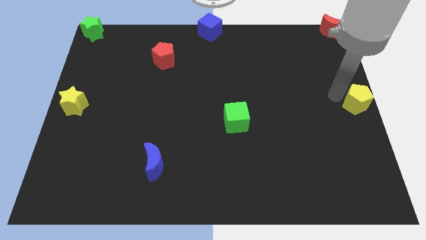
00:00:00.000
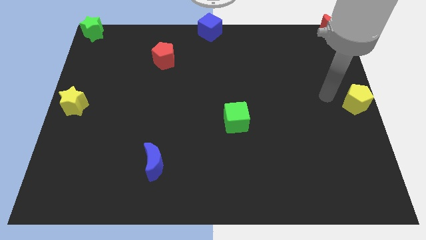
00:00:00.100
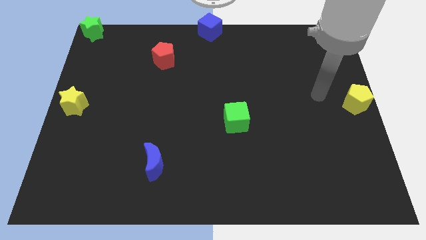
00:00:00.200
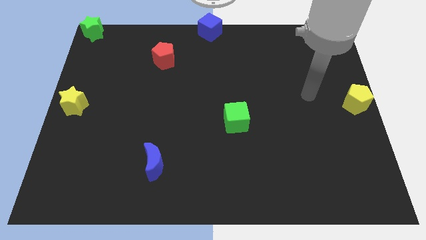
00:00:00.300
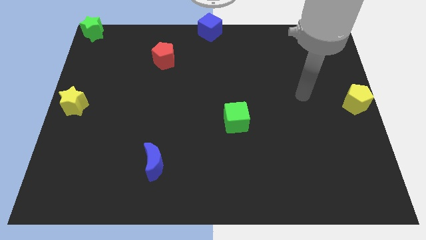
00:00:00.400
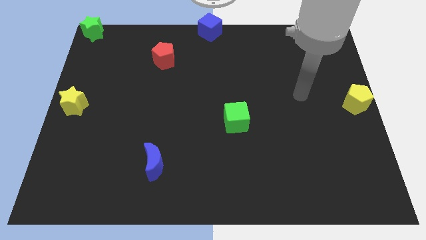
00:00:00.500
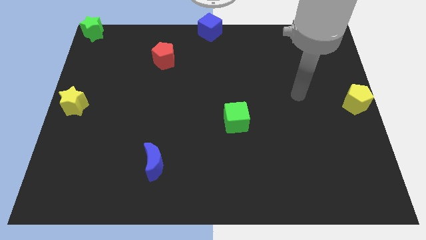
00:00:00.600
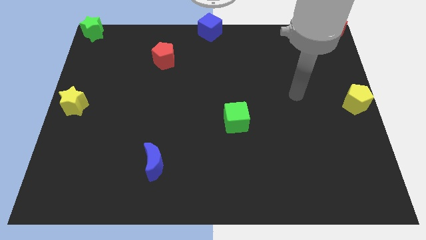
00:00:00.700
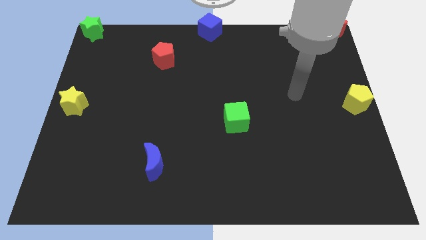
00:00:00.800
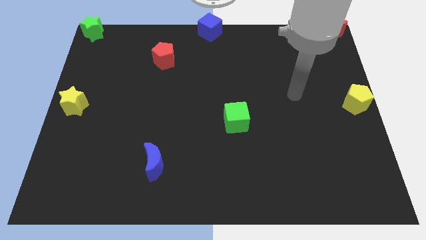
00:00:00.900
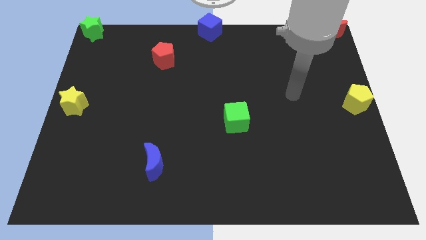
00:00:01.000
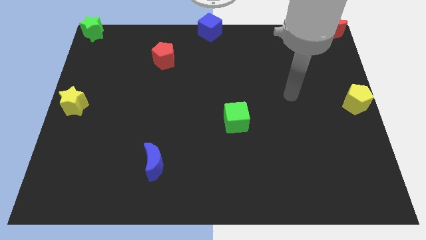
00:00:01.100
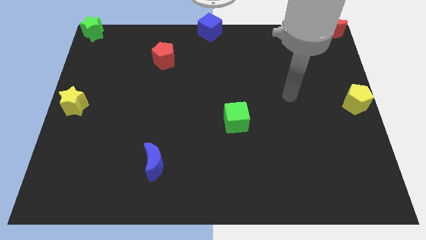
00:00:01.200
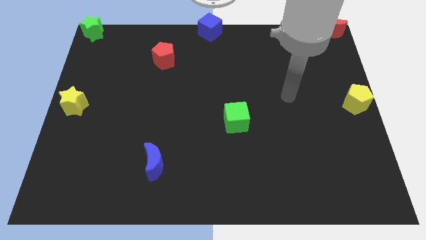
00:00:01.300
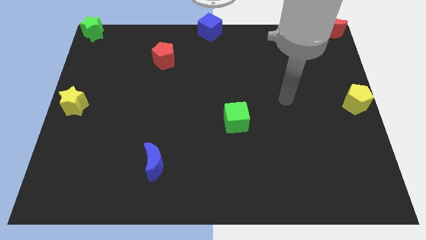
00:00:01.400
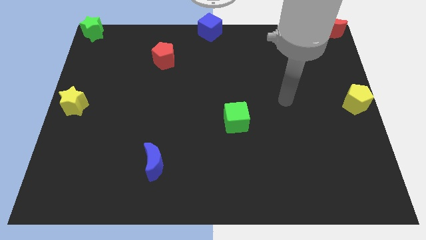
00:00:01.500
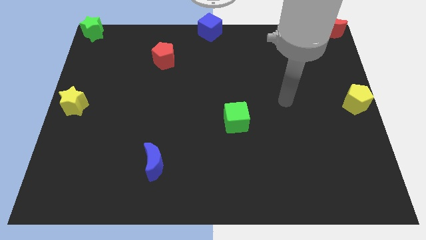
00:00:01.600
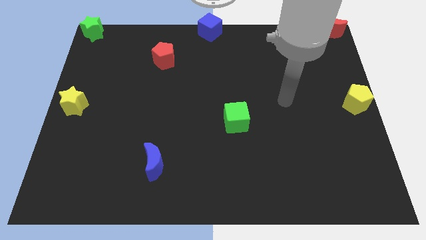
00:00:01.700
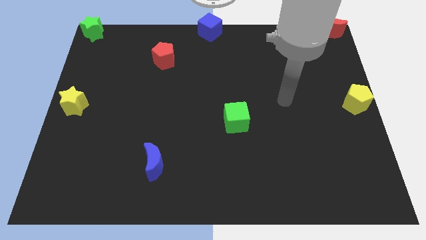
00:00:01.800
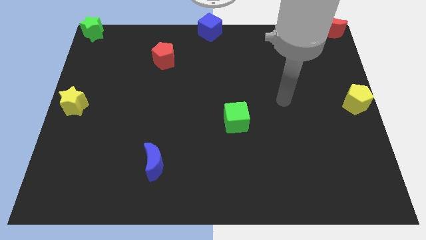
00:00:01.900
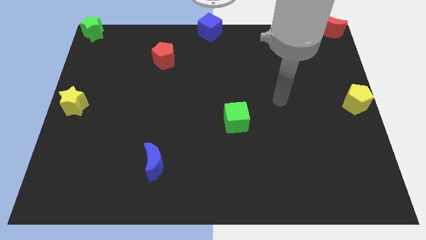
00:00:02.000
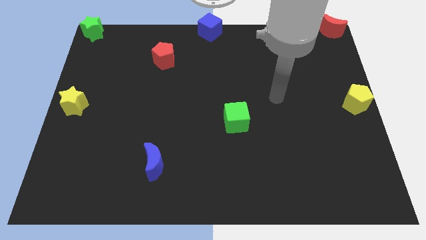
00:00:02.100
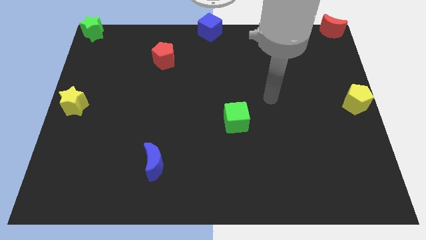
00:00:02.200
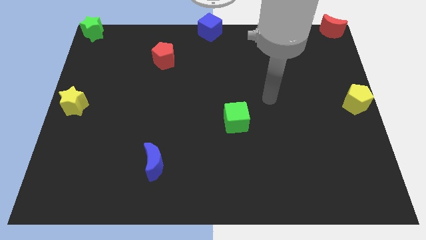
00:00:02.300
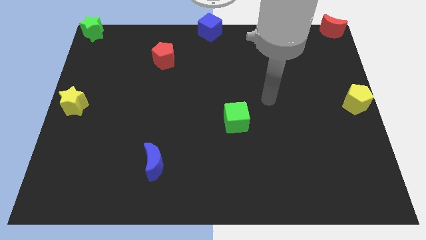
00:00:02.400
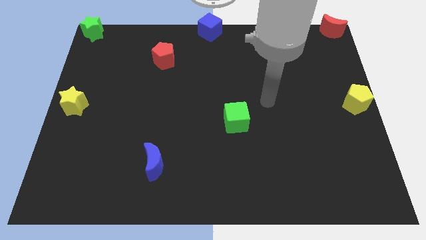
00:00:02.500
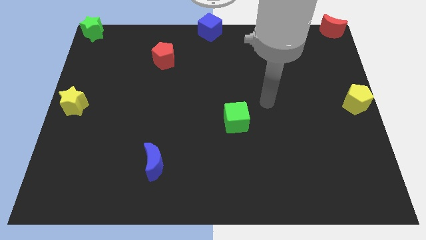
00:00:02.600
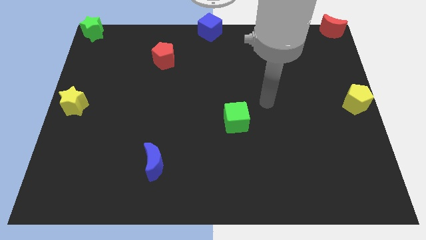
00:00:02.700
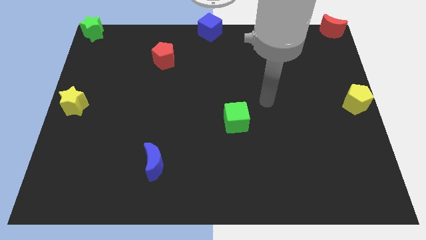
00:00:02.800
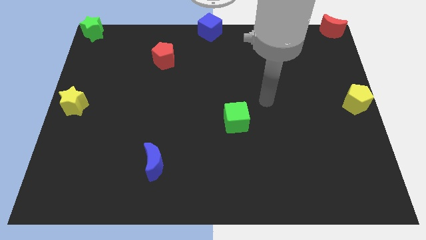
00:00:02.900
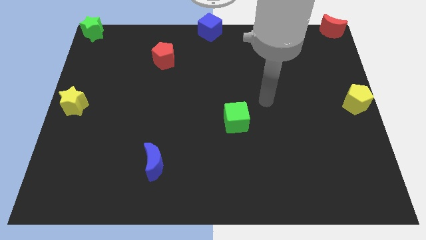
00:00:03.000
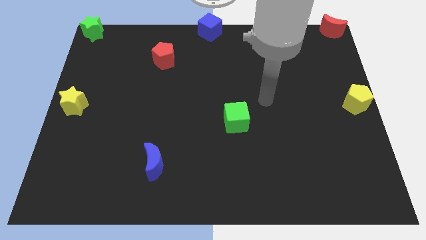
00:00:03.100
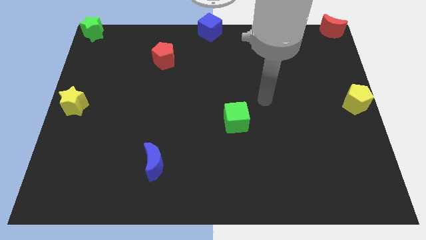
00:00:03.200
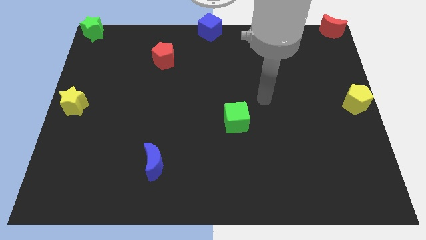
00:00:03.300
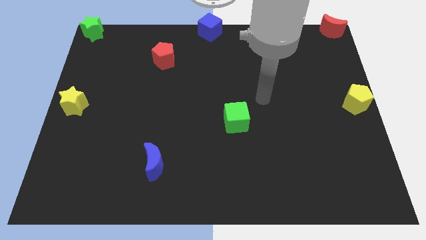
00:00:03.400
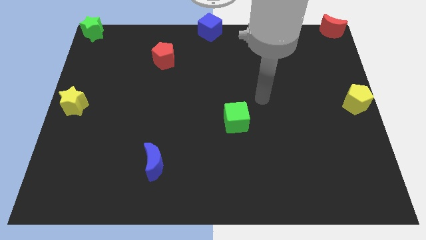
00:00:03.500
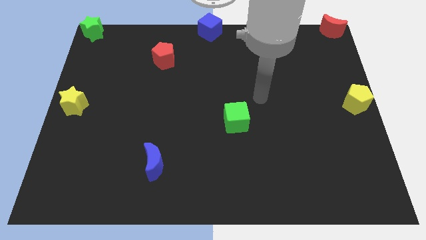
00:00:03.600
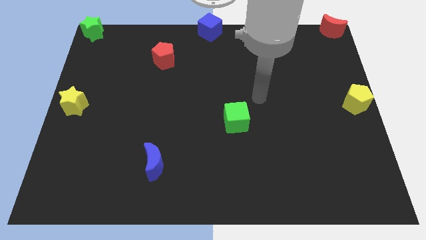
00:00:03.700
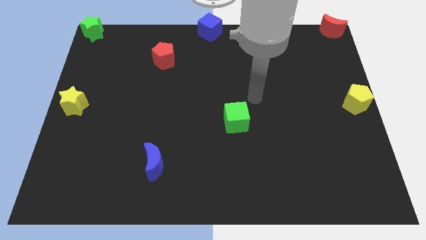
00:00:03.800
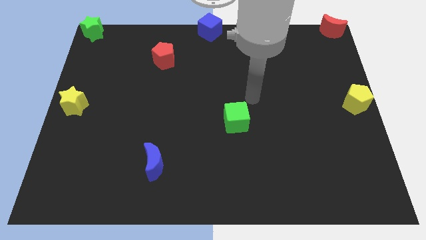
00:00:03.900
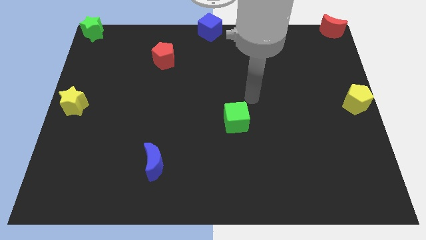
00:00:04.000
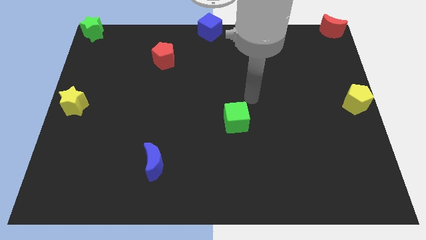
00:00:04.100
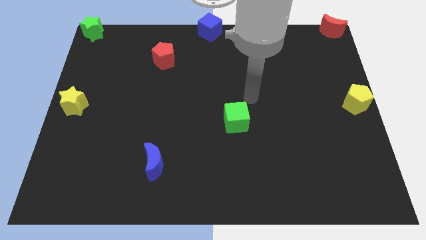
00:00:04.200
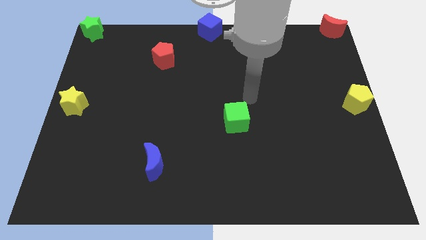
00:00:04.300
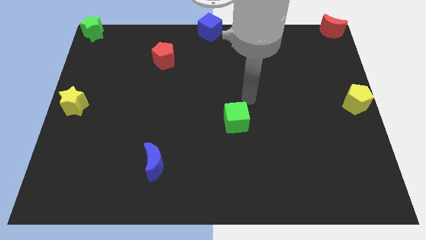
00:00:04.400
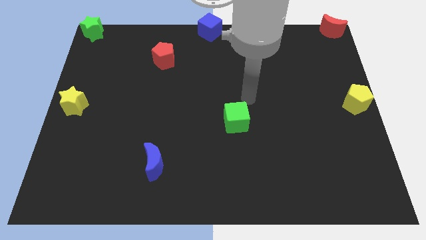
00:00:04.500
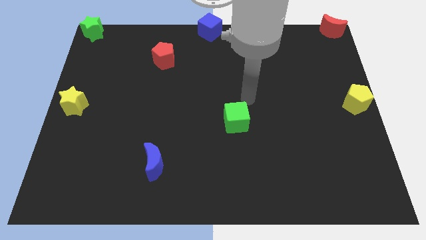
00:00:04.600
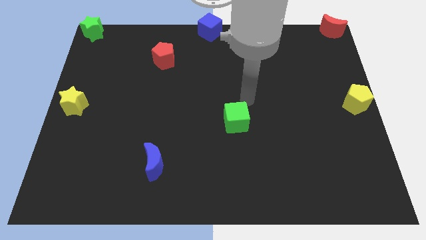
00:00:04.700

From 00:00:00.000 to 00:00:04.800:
move your arm away from the yellow pentagon

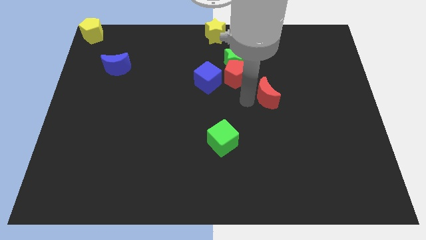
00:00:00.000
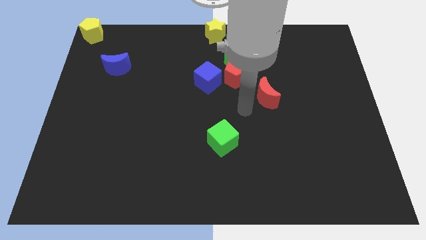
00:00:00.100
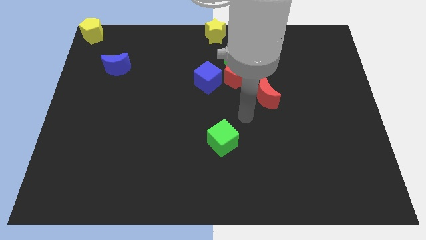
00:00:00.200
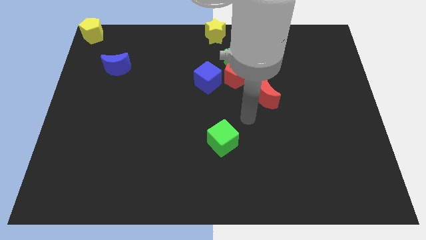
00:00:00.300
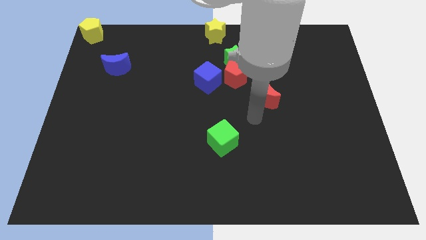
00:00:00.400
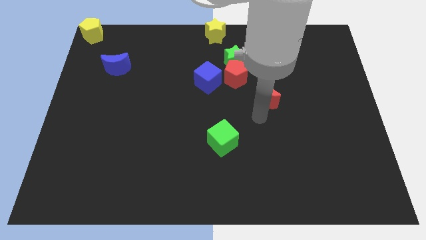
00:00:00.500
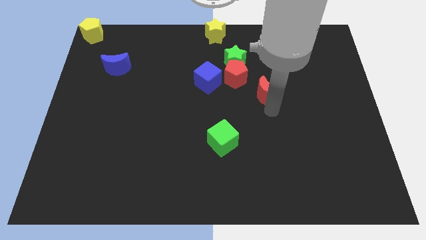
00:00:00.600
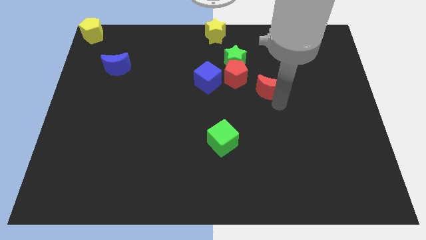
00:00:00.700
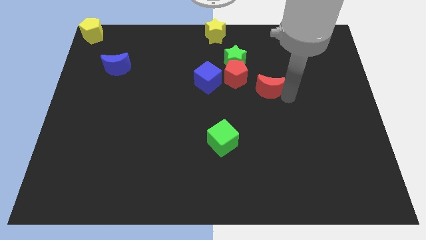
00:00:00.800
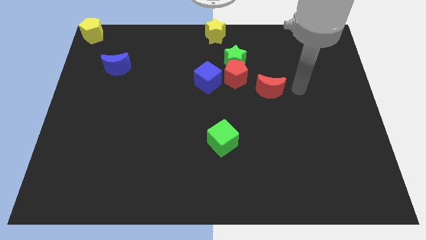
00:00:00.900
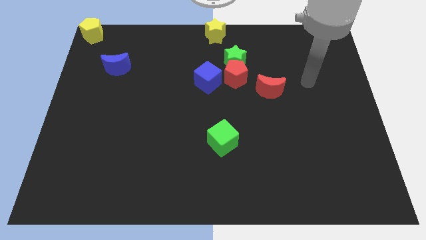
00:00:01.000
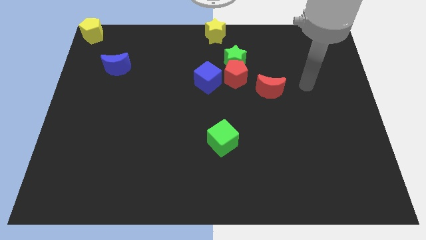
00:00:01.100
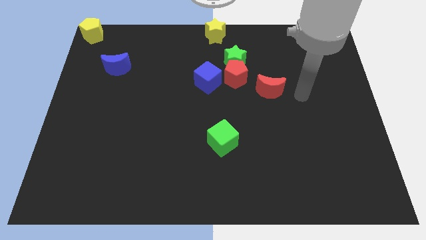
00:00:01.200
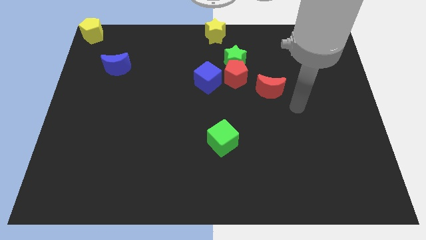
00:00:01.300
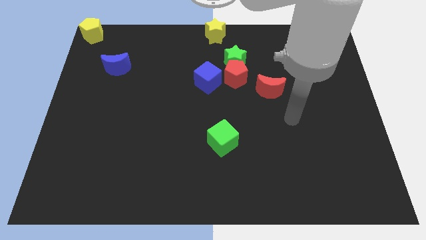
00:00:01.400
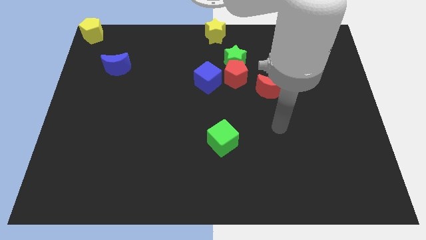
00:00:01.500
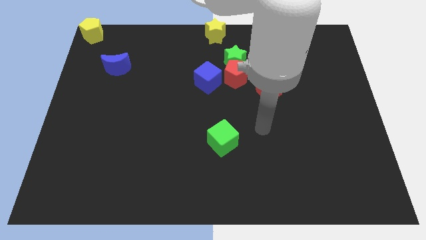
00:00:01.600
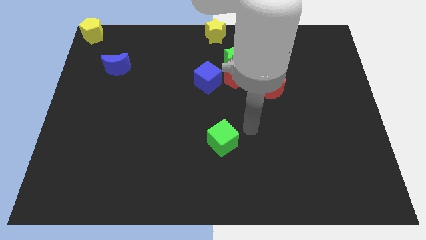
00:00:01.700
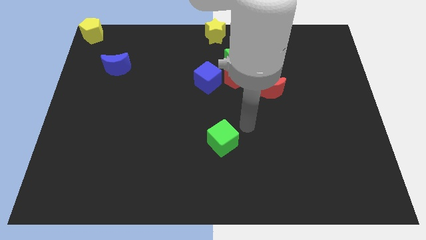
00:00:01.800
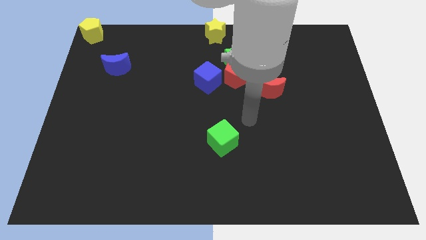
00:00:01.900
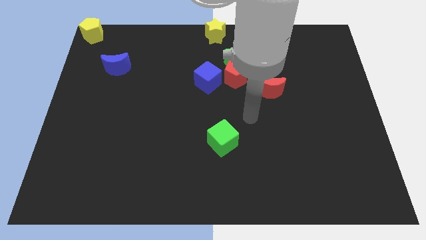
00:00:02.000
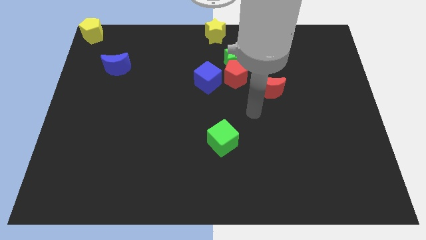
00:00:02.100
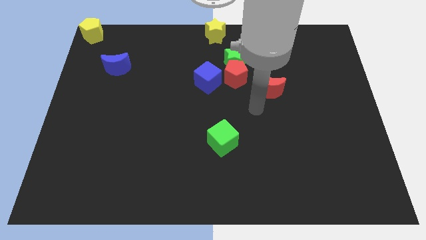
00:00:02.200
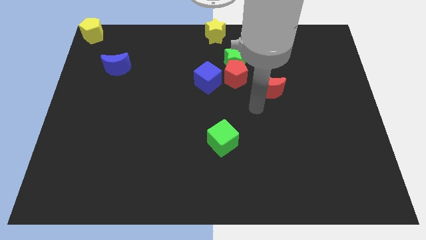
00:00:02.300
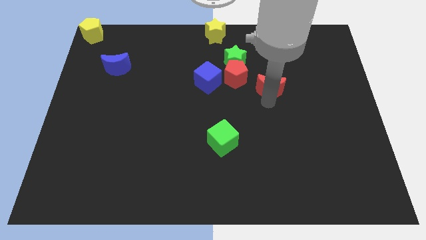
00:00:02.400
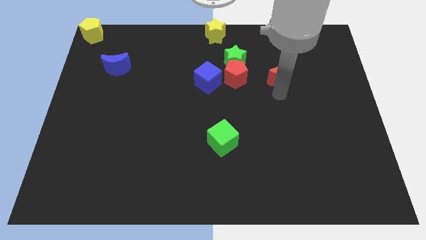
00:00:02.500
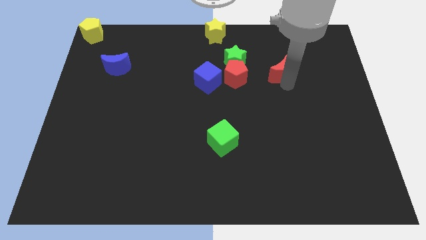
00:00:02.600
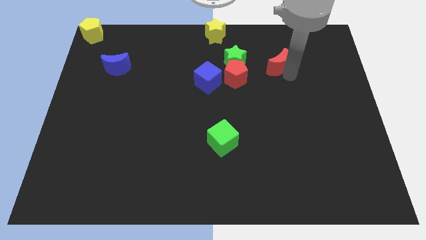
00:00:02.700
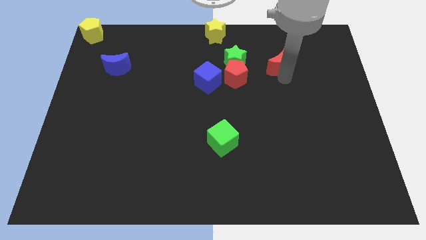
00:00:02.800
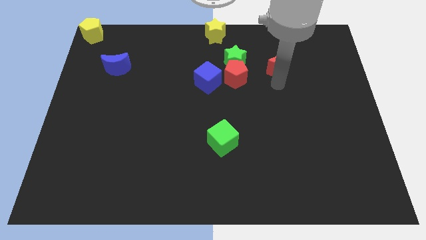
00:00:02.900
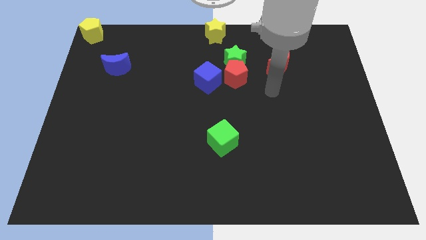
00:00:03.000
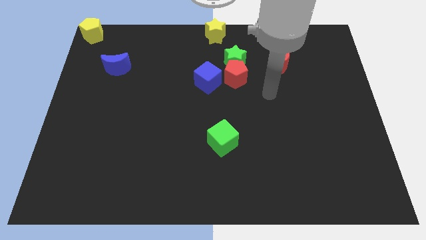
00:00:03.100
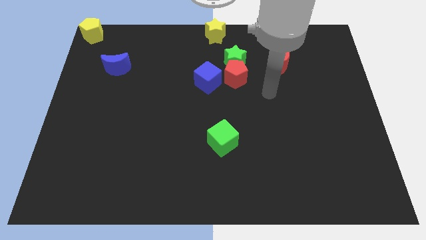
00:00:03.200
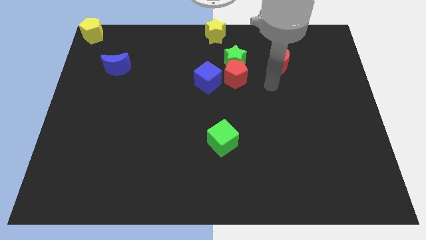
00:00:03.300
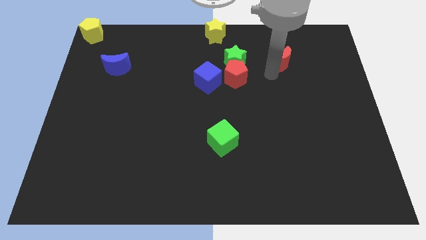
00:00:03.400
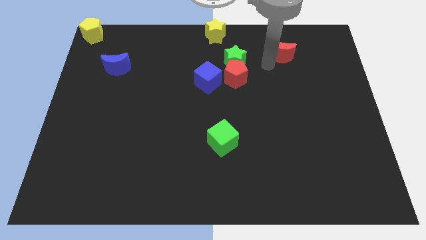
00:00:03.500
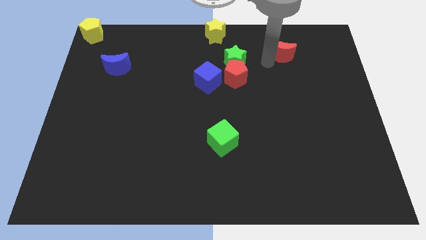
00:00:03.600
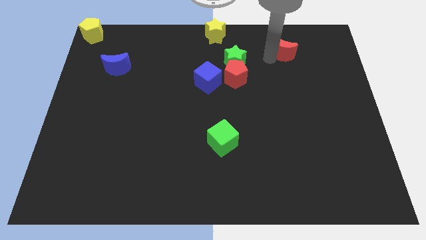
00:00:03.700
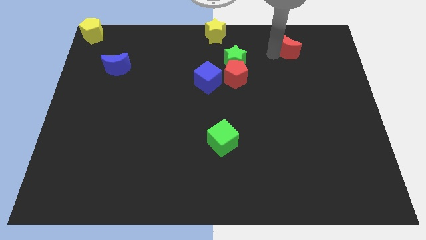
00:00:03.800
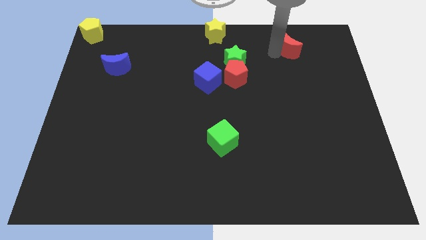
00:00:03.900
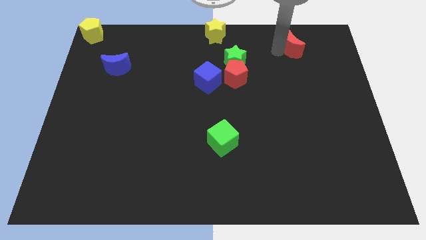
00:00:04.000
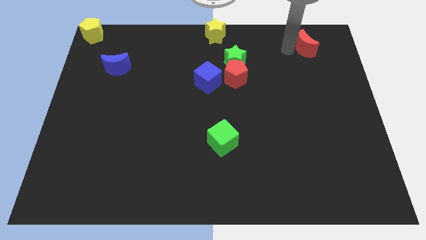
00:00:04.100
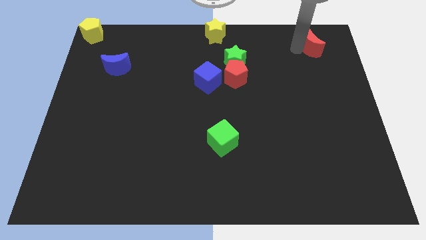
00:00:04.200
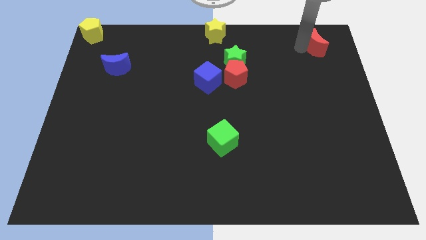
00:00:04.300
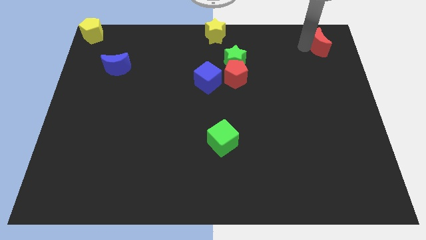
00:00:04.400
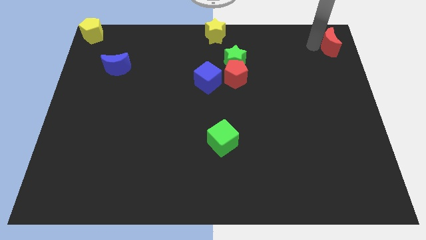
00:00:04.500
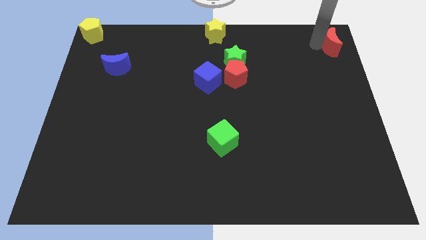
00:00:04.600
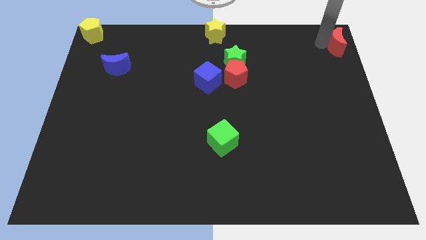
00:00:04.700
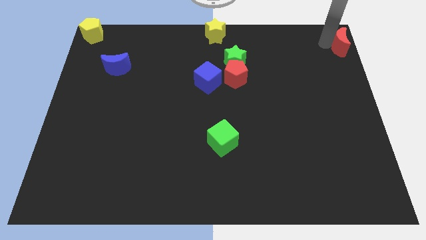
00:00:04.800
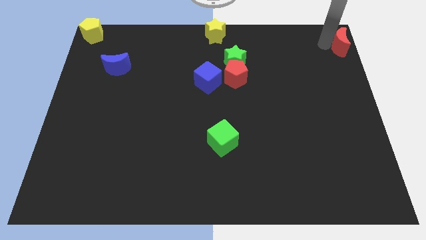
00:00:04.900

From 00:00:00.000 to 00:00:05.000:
move the red moon towards the top right corner of the board
